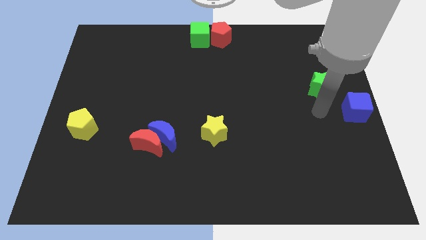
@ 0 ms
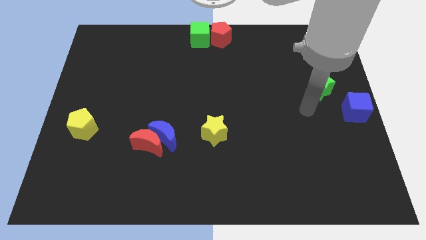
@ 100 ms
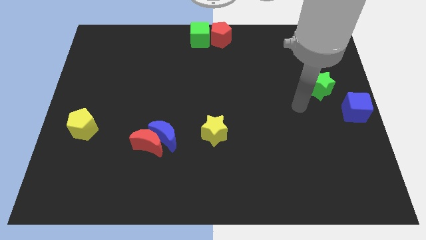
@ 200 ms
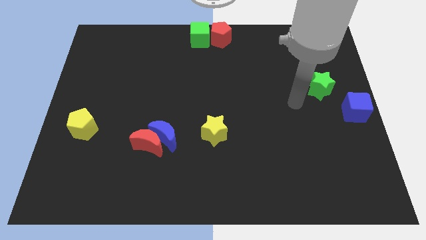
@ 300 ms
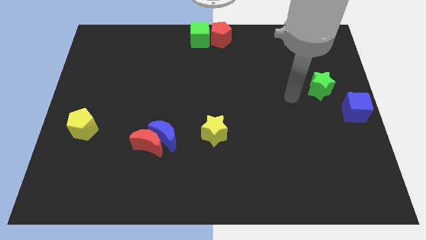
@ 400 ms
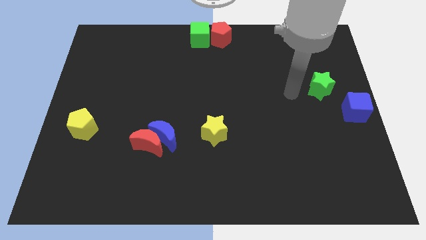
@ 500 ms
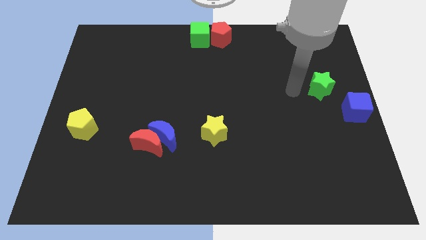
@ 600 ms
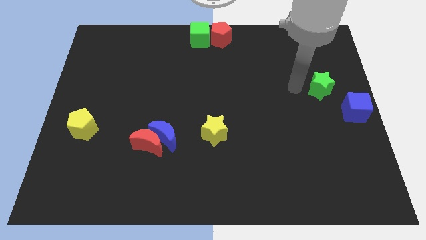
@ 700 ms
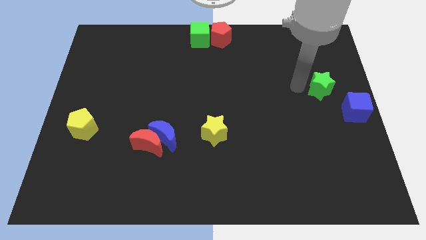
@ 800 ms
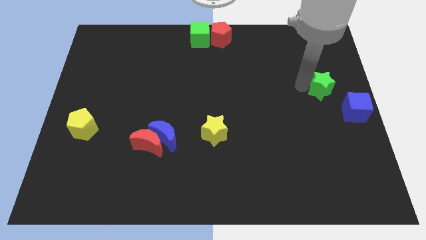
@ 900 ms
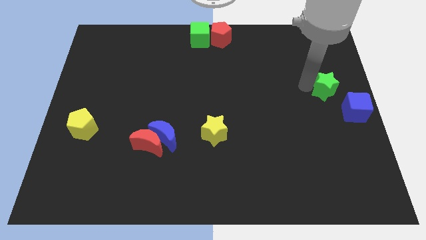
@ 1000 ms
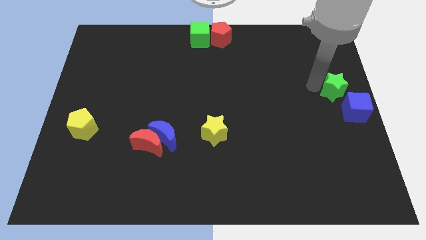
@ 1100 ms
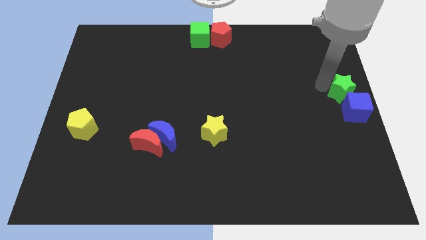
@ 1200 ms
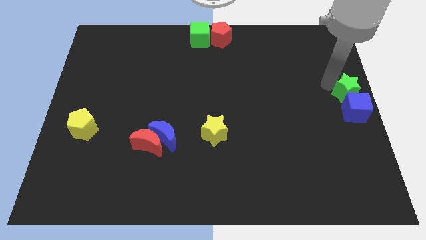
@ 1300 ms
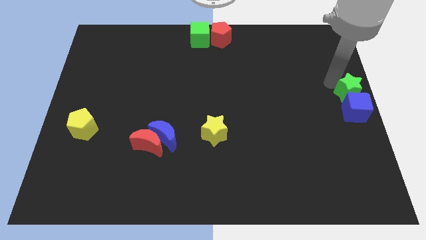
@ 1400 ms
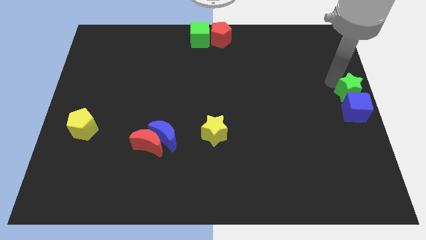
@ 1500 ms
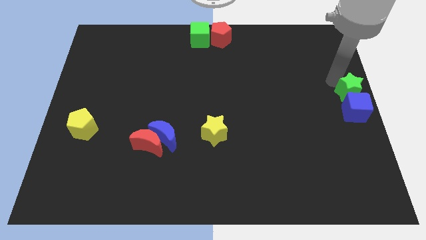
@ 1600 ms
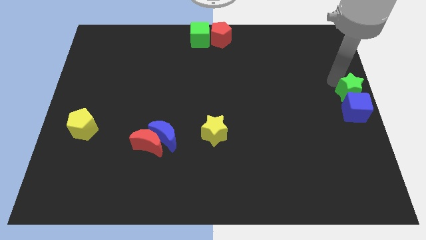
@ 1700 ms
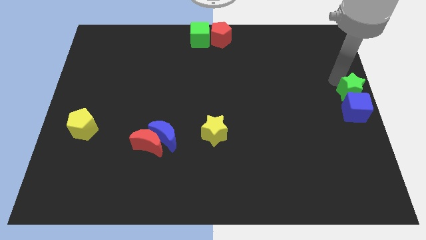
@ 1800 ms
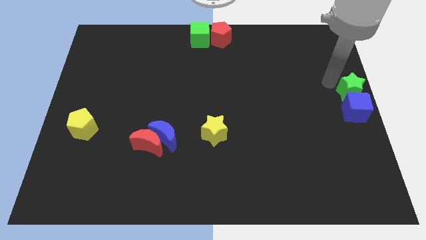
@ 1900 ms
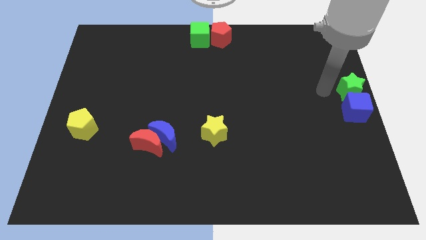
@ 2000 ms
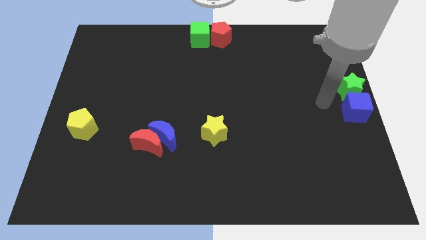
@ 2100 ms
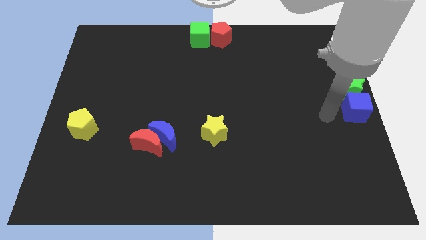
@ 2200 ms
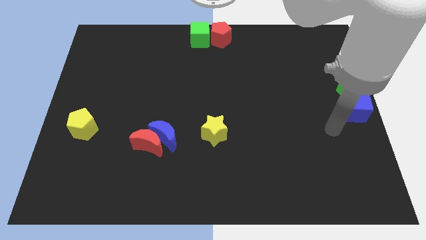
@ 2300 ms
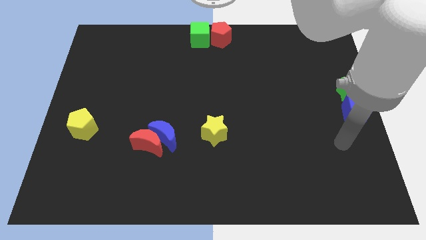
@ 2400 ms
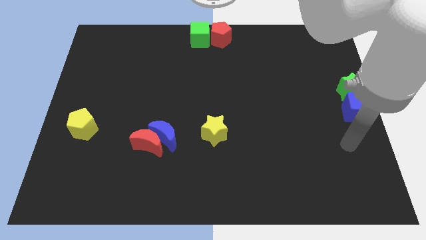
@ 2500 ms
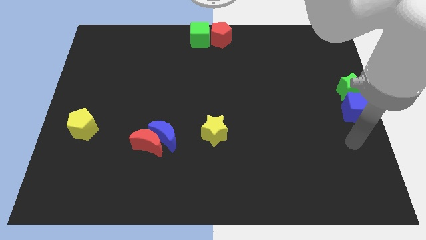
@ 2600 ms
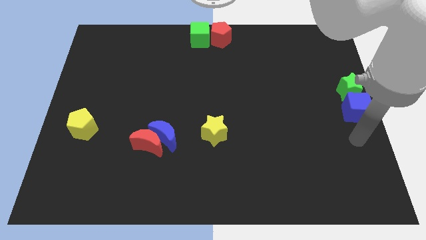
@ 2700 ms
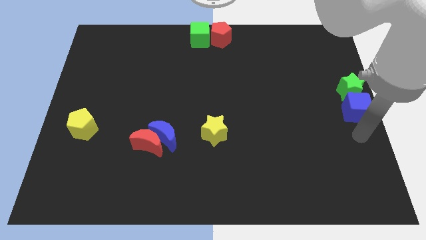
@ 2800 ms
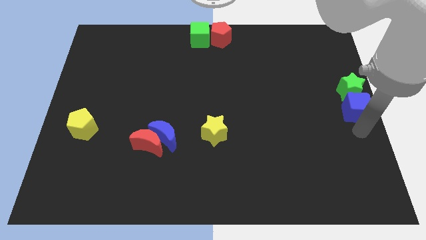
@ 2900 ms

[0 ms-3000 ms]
move the green star to the right center of the board

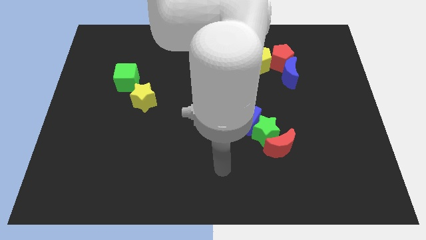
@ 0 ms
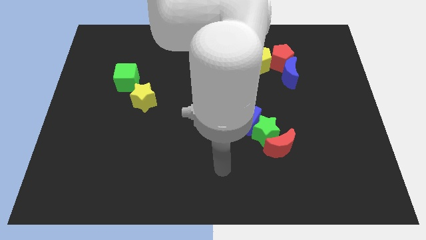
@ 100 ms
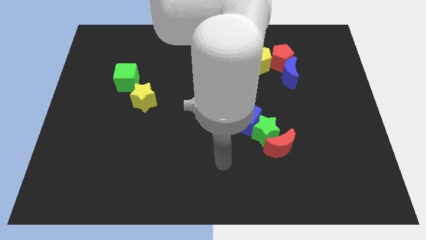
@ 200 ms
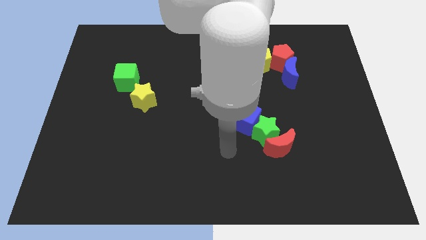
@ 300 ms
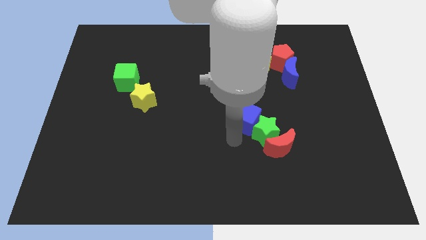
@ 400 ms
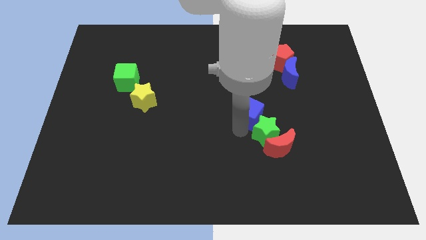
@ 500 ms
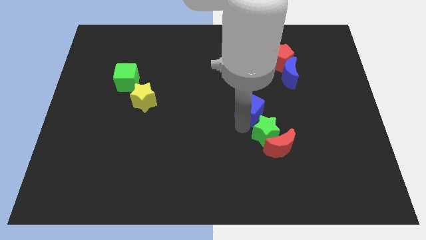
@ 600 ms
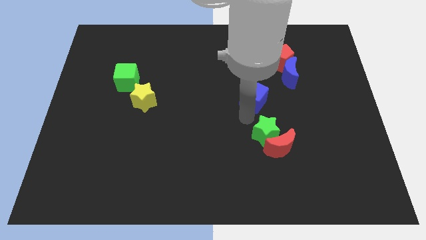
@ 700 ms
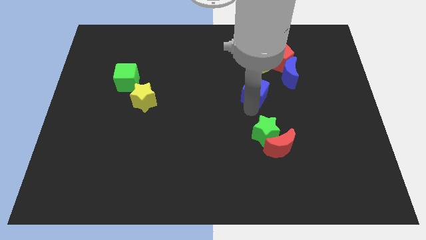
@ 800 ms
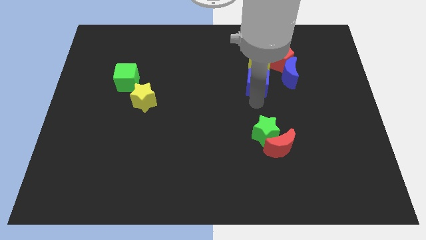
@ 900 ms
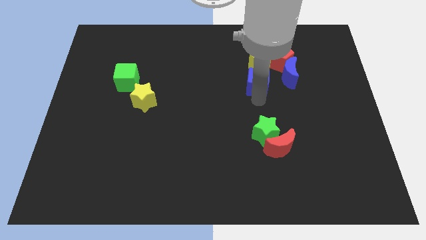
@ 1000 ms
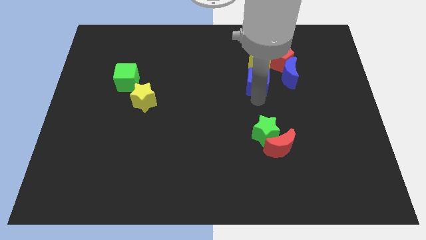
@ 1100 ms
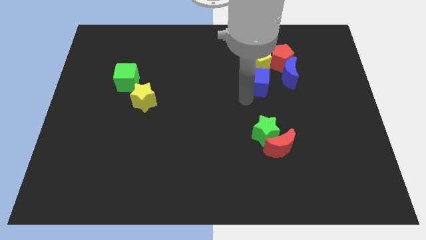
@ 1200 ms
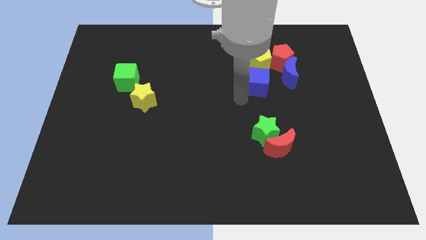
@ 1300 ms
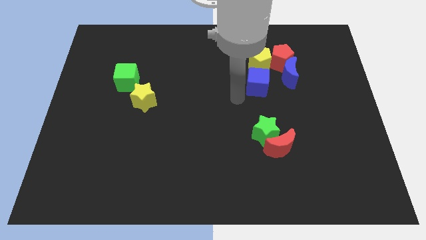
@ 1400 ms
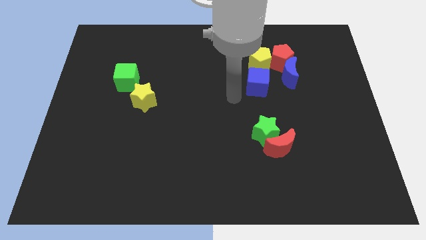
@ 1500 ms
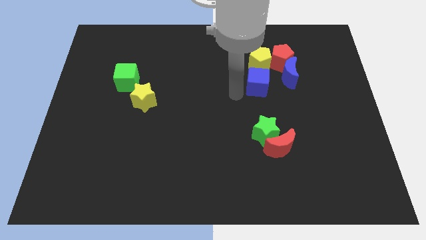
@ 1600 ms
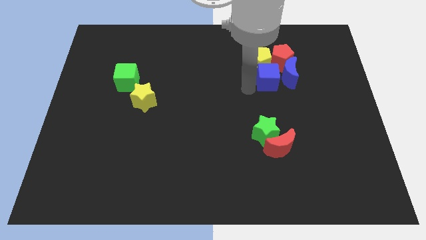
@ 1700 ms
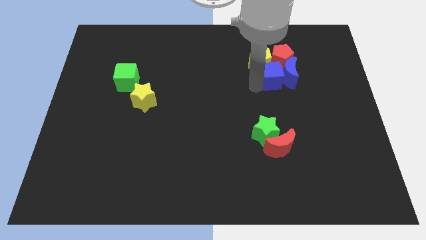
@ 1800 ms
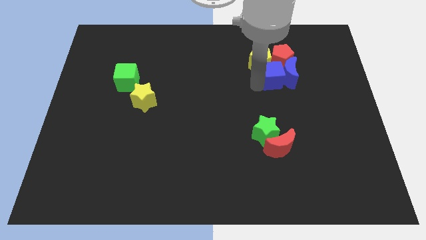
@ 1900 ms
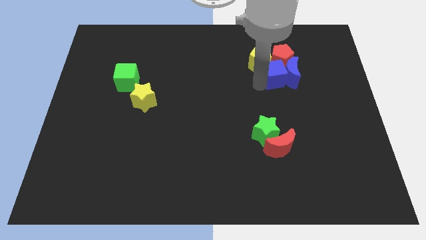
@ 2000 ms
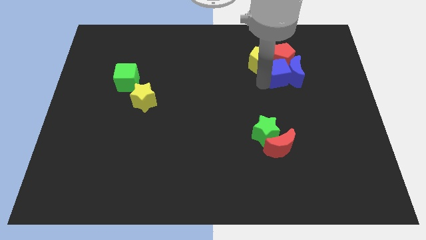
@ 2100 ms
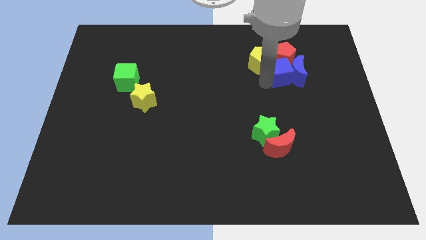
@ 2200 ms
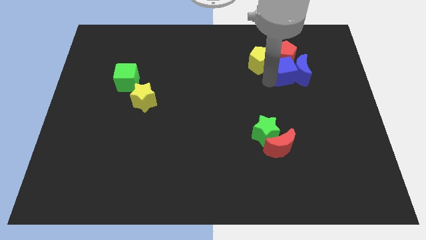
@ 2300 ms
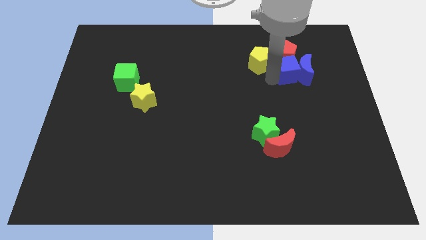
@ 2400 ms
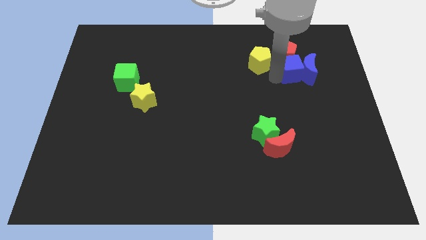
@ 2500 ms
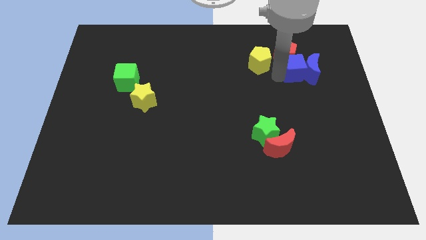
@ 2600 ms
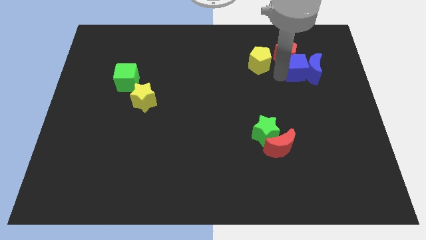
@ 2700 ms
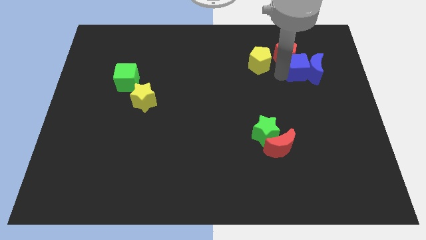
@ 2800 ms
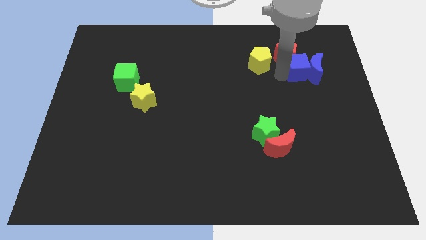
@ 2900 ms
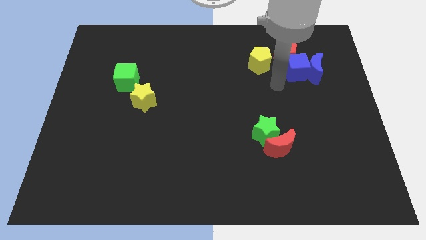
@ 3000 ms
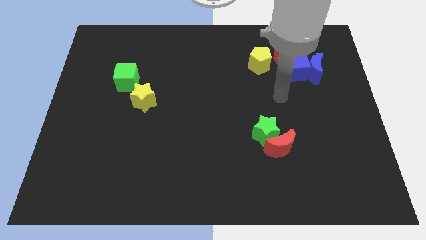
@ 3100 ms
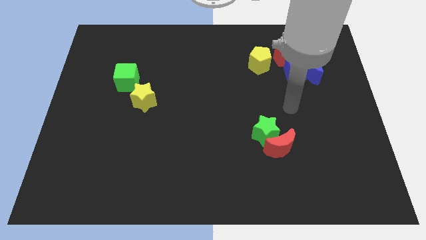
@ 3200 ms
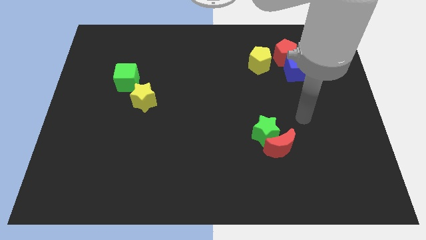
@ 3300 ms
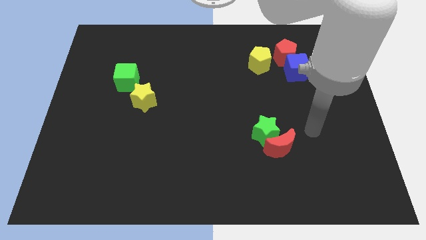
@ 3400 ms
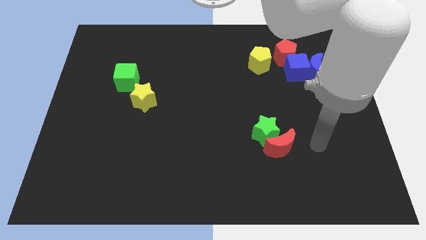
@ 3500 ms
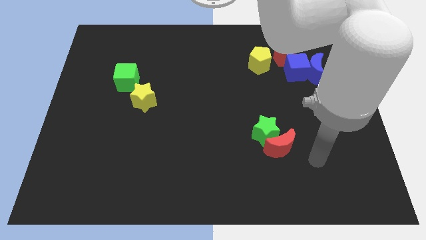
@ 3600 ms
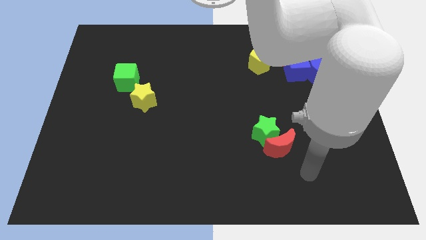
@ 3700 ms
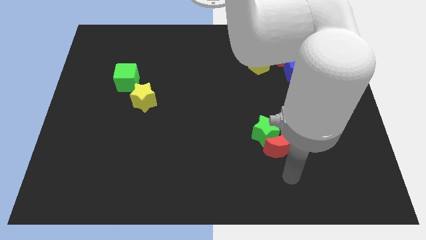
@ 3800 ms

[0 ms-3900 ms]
push the blue blocks and red pentagon towards the top right side of the board

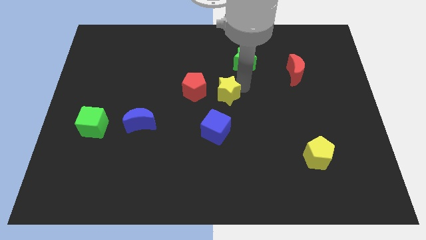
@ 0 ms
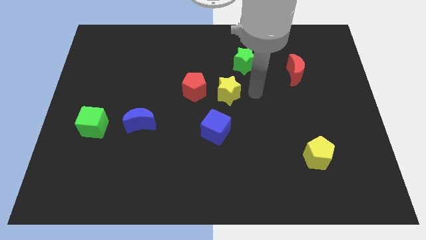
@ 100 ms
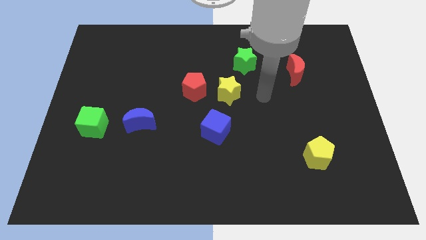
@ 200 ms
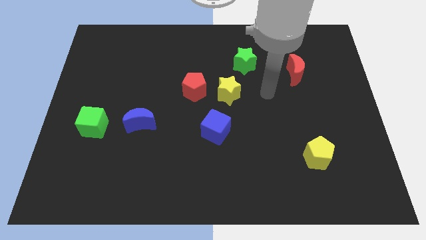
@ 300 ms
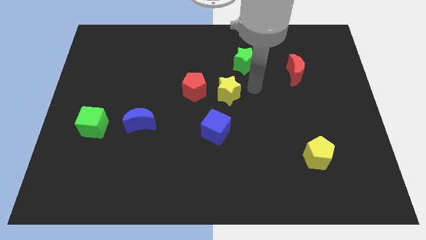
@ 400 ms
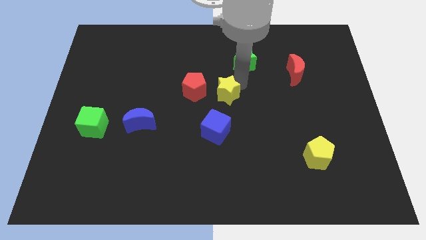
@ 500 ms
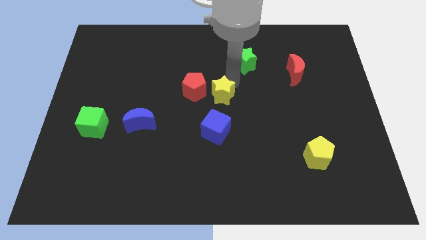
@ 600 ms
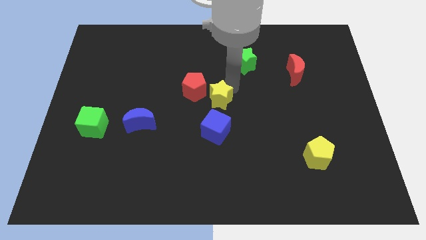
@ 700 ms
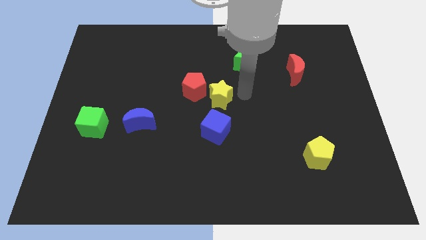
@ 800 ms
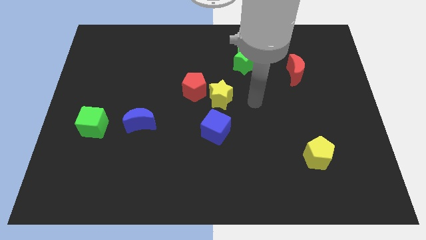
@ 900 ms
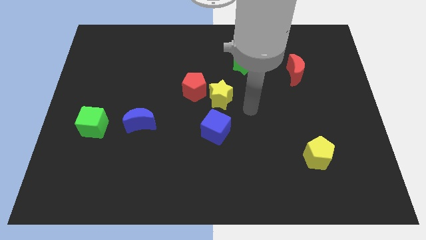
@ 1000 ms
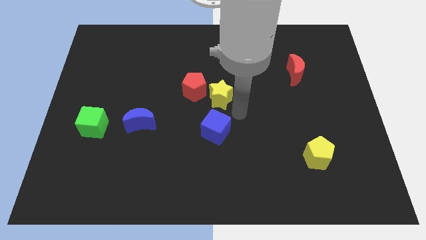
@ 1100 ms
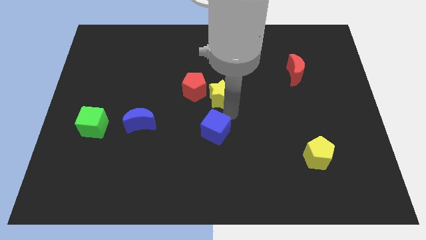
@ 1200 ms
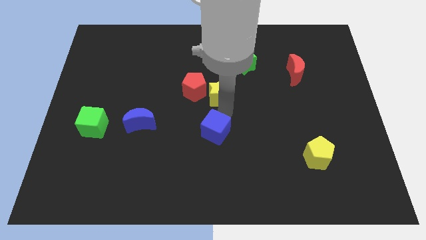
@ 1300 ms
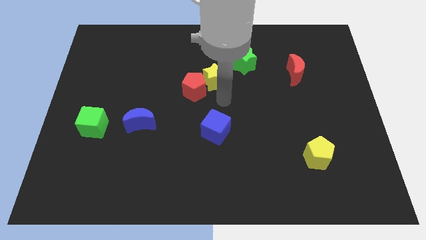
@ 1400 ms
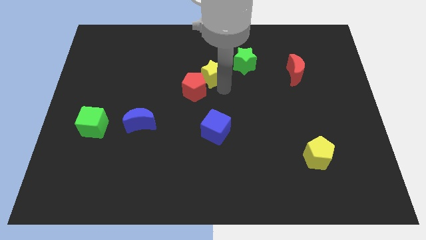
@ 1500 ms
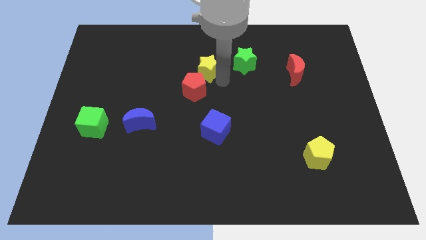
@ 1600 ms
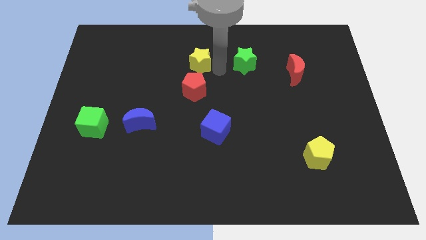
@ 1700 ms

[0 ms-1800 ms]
move yellow star above the red pentagon
